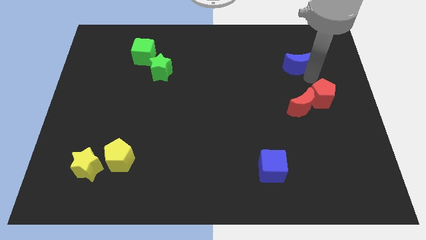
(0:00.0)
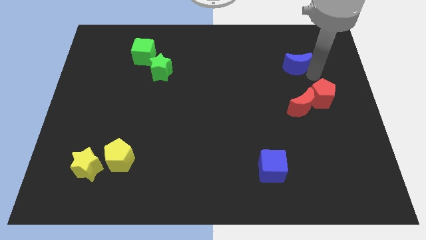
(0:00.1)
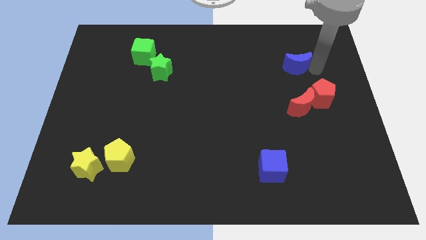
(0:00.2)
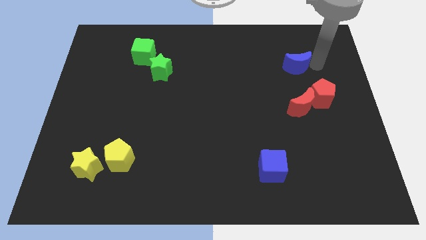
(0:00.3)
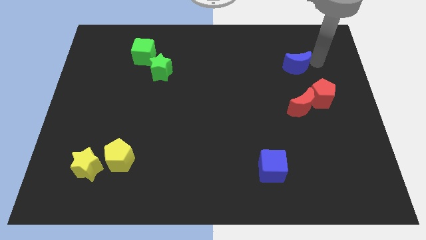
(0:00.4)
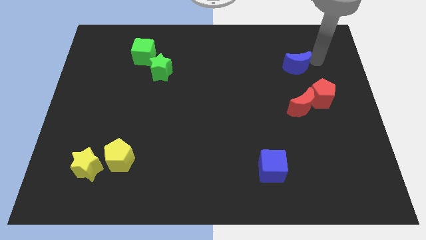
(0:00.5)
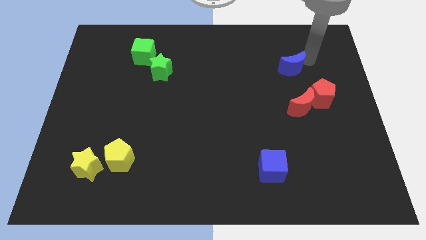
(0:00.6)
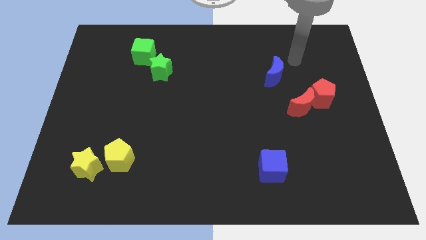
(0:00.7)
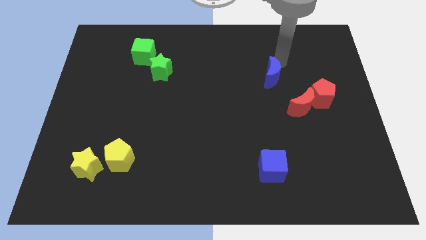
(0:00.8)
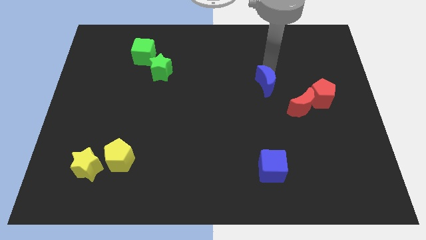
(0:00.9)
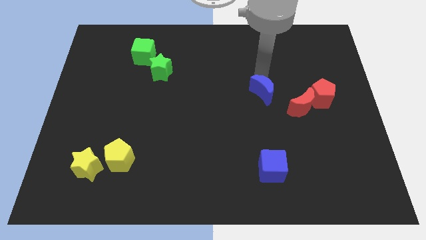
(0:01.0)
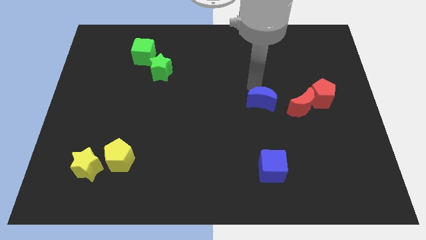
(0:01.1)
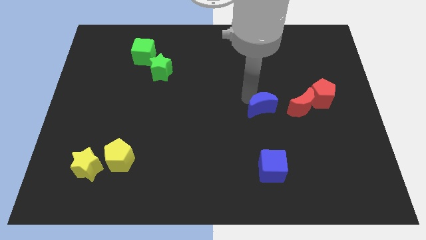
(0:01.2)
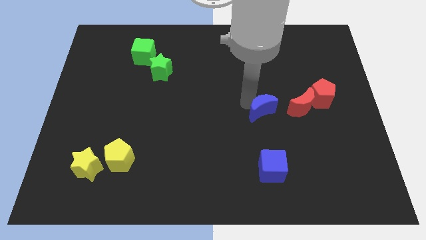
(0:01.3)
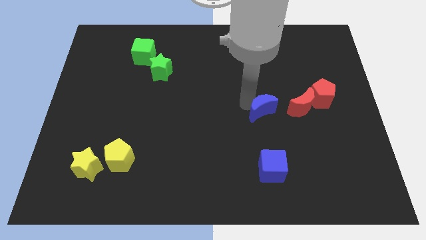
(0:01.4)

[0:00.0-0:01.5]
move the blue crescent to the left of the red crescent

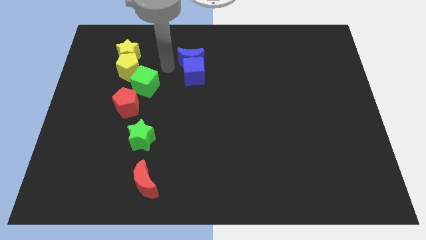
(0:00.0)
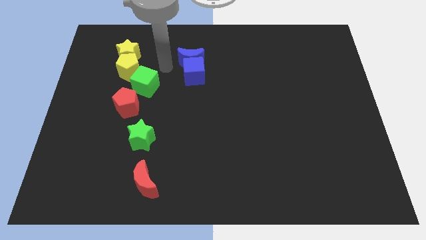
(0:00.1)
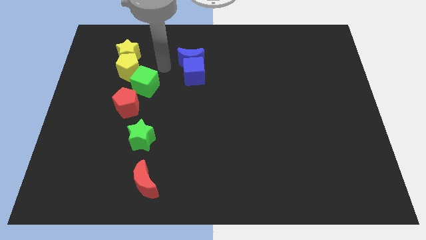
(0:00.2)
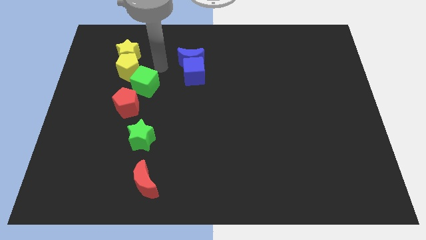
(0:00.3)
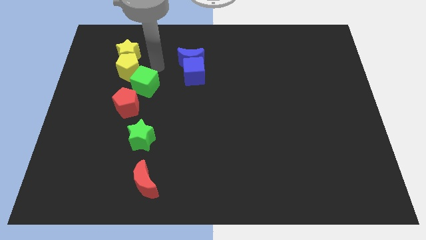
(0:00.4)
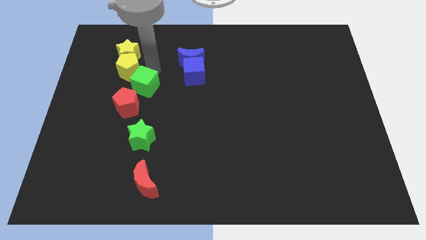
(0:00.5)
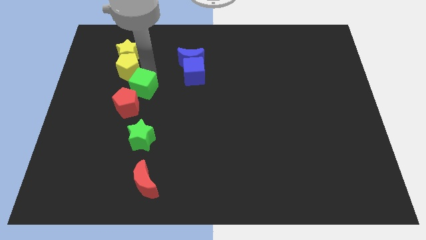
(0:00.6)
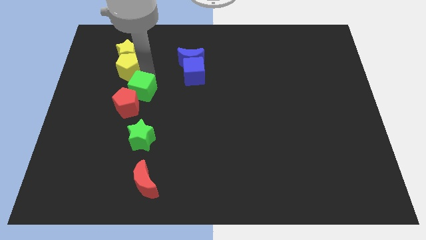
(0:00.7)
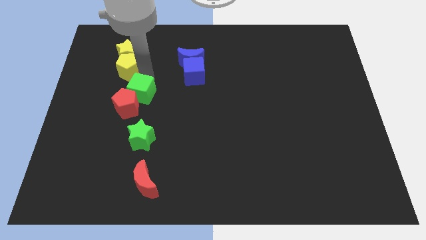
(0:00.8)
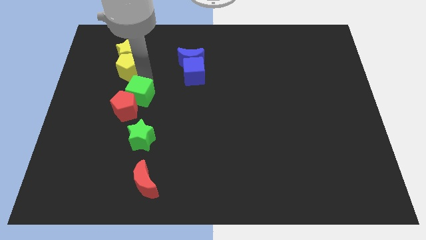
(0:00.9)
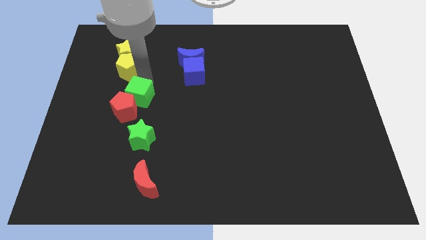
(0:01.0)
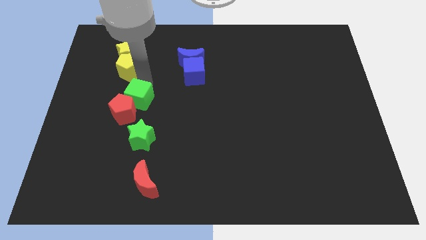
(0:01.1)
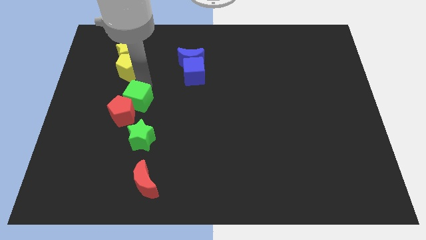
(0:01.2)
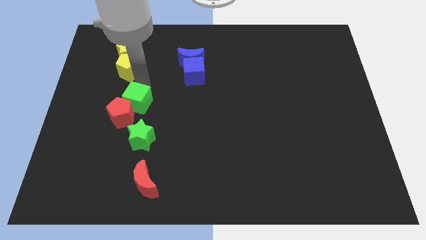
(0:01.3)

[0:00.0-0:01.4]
put the green cube and red pentagon together

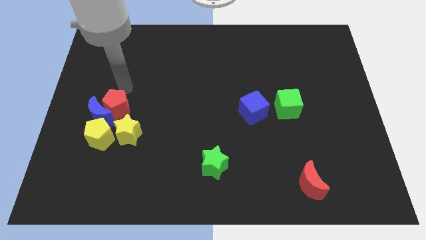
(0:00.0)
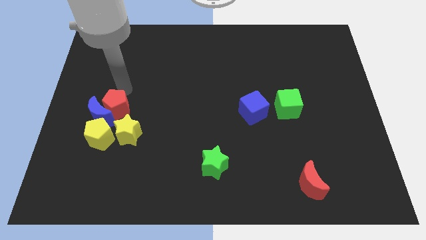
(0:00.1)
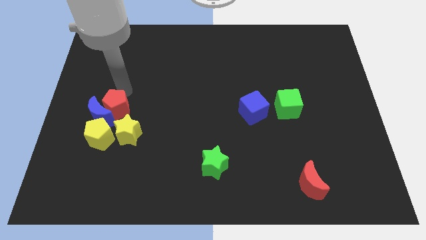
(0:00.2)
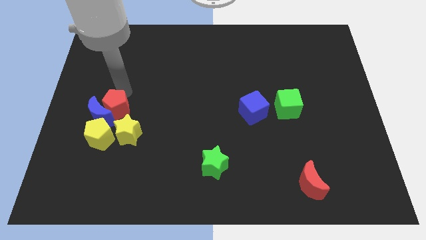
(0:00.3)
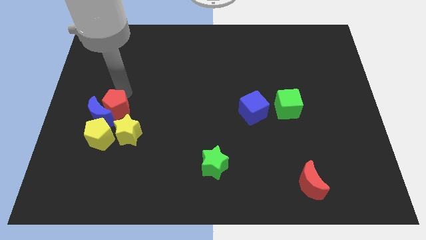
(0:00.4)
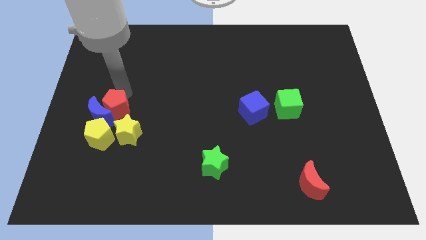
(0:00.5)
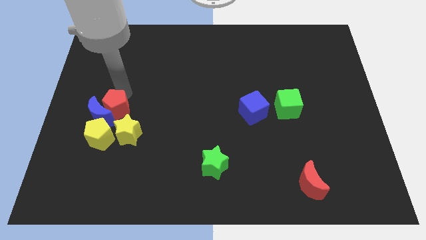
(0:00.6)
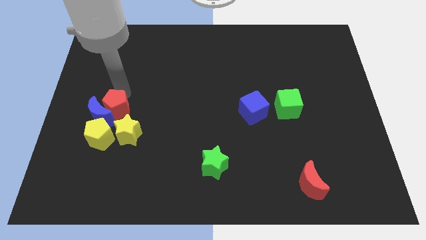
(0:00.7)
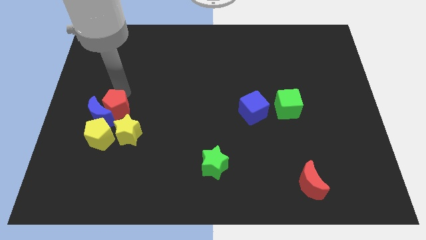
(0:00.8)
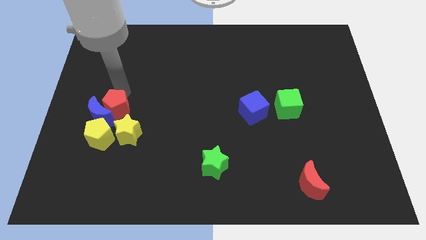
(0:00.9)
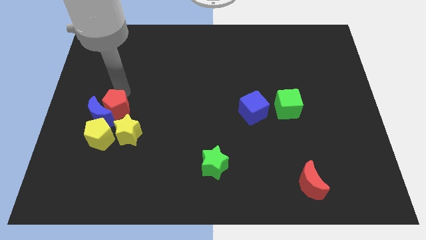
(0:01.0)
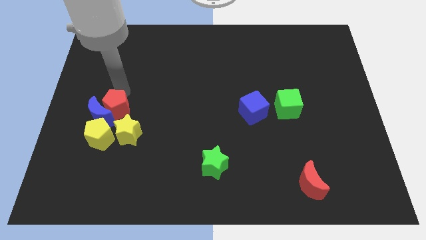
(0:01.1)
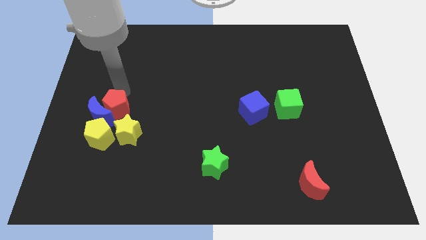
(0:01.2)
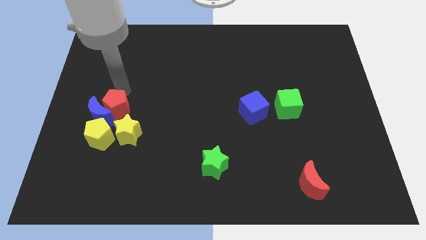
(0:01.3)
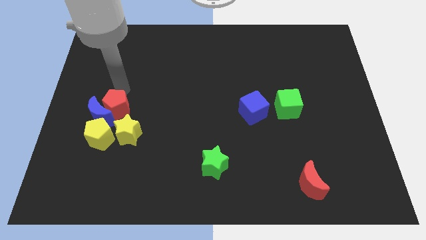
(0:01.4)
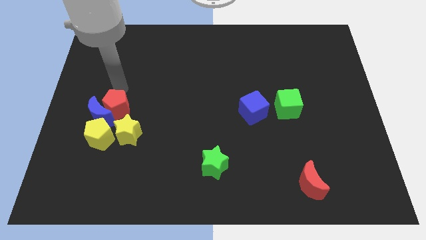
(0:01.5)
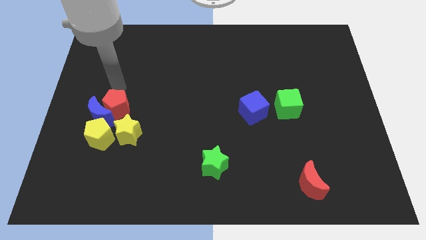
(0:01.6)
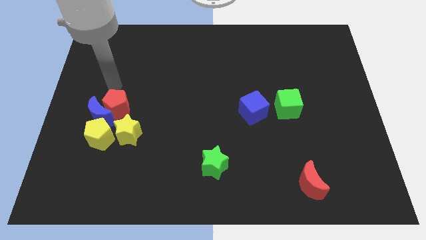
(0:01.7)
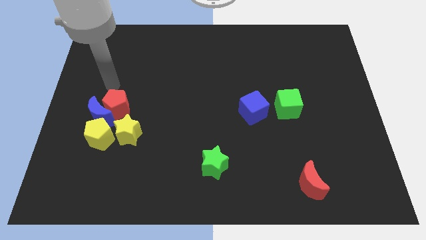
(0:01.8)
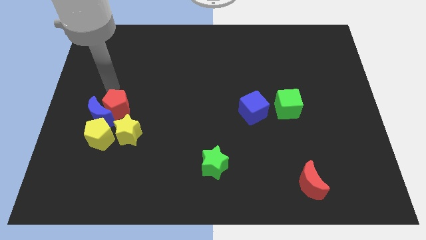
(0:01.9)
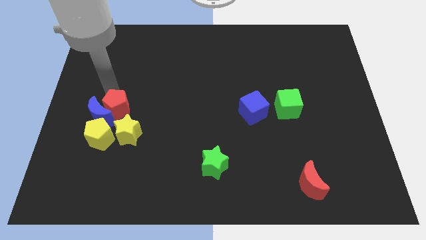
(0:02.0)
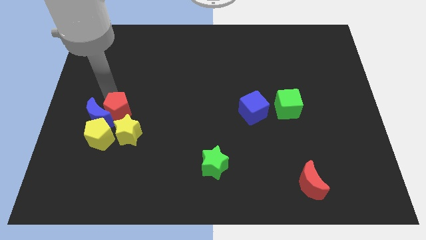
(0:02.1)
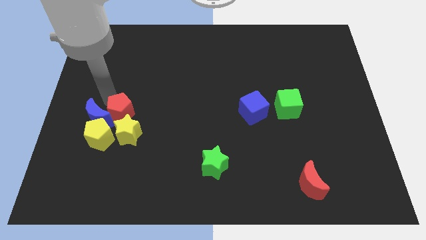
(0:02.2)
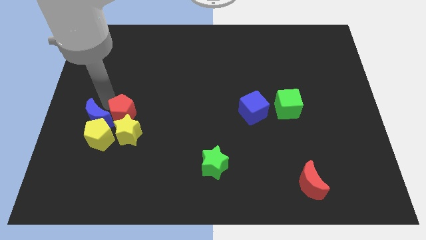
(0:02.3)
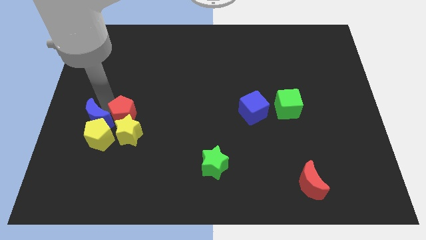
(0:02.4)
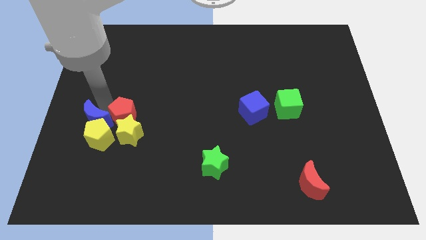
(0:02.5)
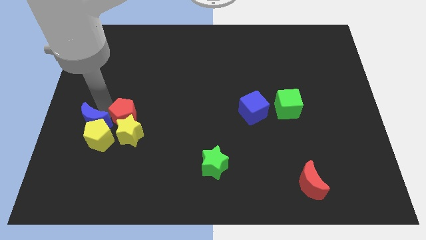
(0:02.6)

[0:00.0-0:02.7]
push a group of blocks slightly downward

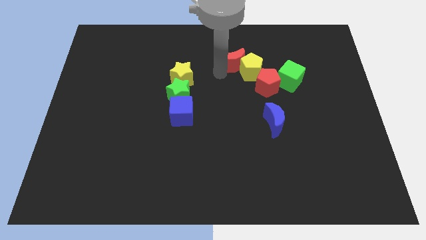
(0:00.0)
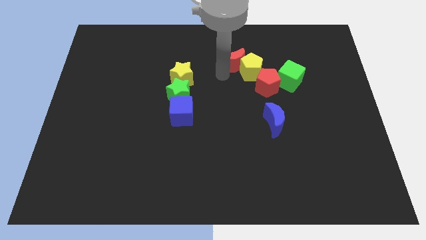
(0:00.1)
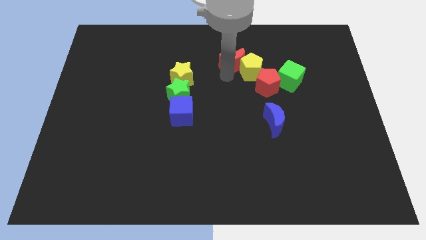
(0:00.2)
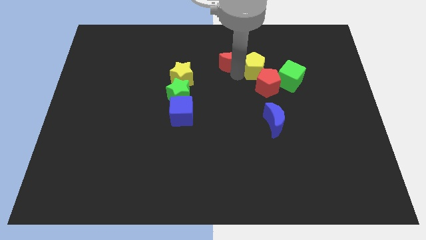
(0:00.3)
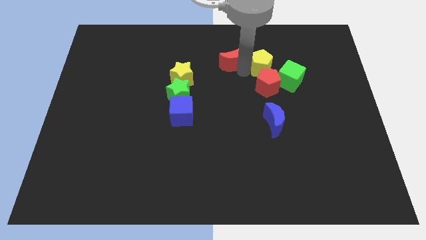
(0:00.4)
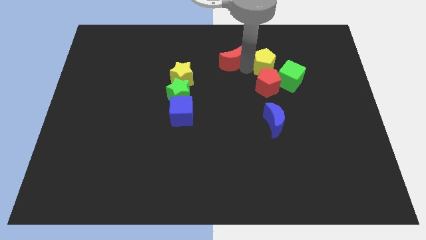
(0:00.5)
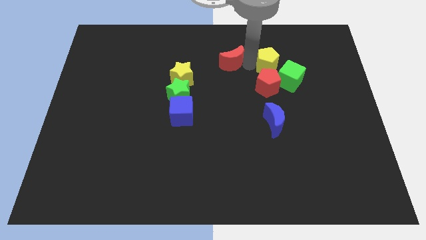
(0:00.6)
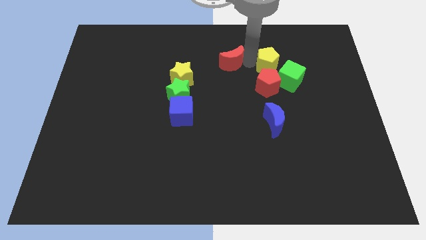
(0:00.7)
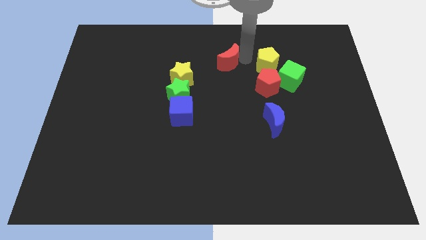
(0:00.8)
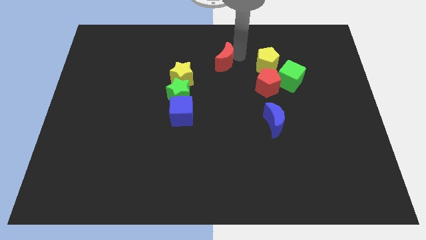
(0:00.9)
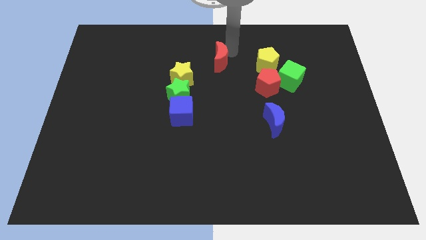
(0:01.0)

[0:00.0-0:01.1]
separate the yellow pentagon and the red crescent

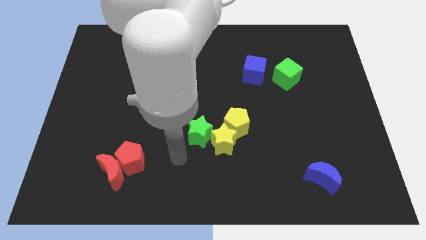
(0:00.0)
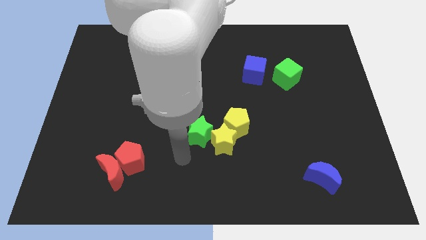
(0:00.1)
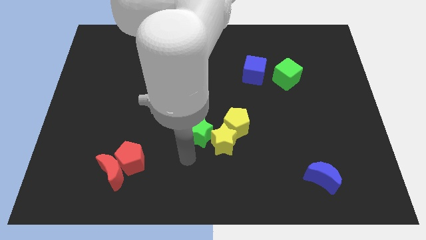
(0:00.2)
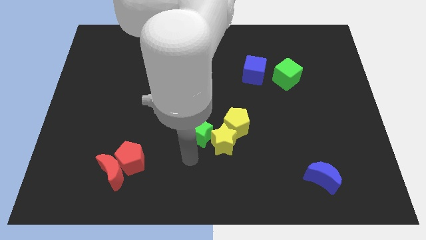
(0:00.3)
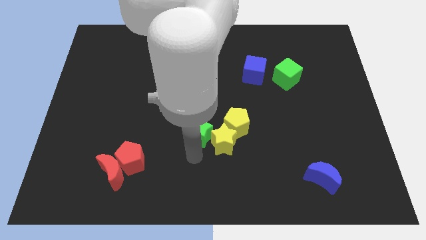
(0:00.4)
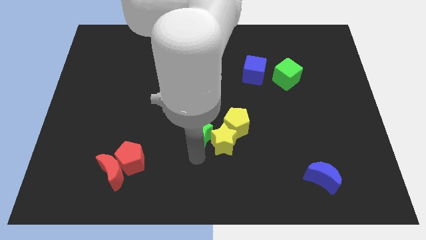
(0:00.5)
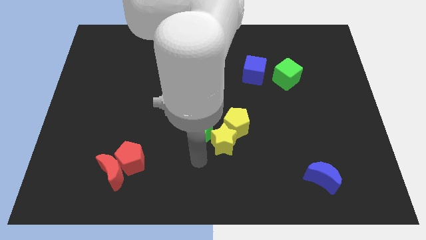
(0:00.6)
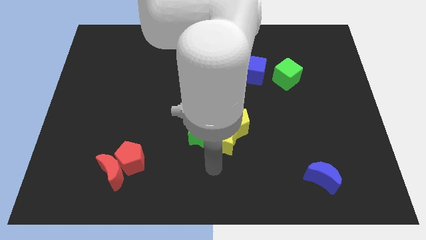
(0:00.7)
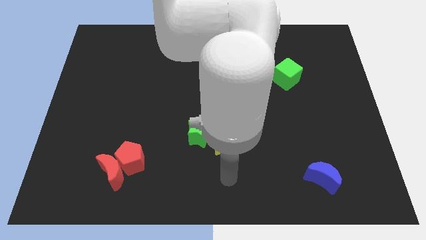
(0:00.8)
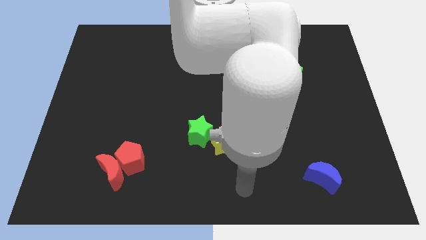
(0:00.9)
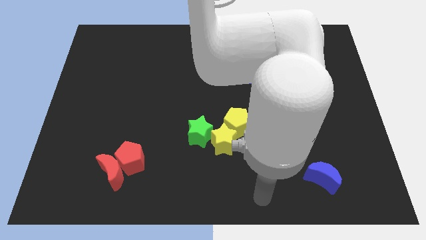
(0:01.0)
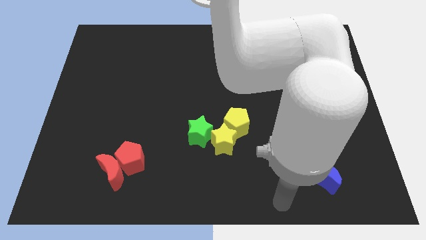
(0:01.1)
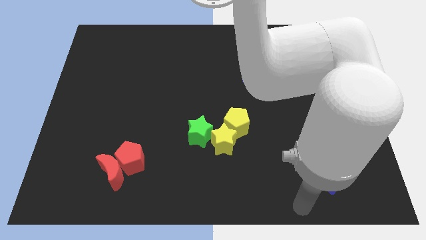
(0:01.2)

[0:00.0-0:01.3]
move the arm towards the blue crescent

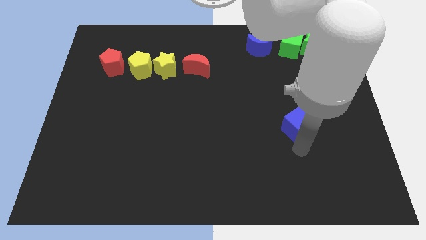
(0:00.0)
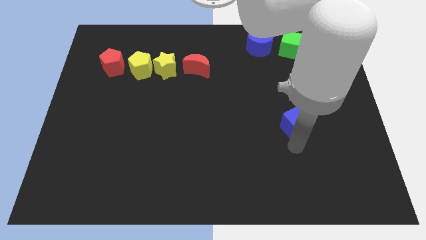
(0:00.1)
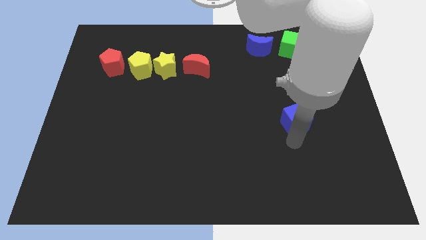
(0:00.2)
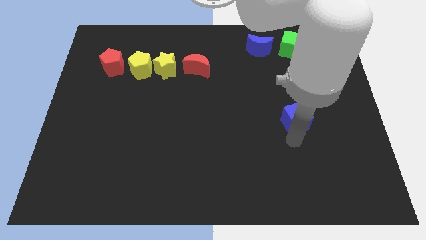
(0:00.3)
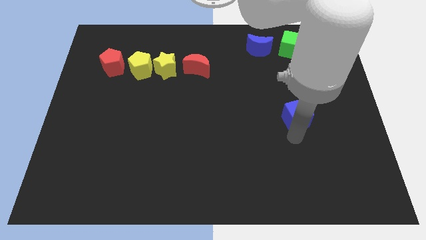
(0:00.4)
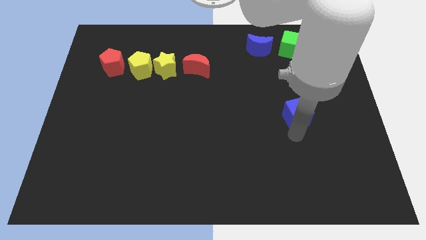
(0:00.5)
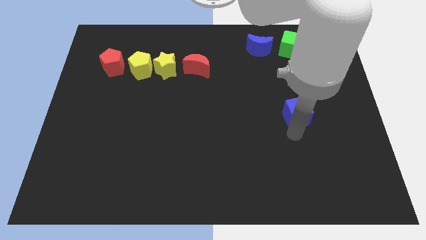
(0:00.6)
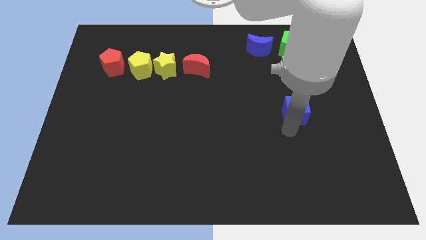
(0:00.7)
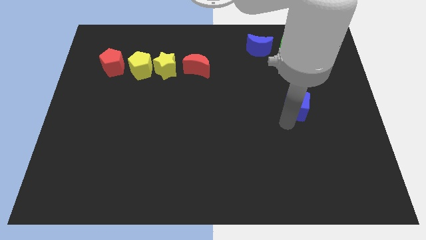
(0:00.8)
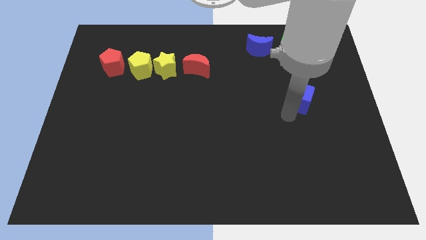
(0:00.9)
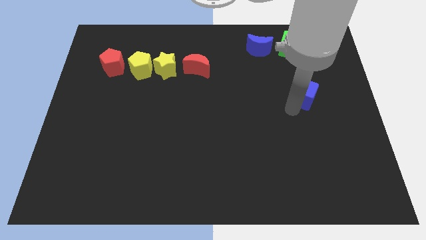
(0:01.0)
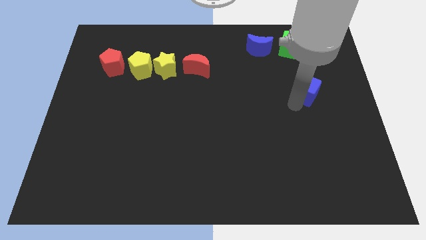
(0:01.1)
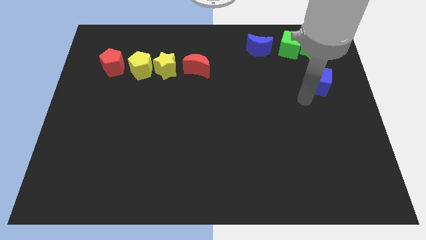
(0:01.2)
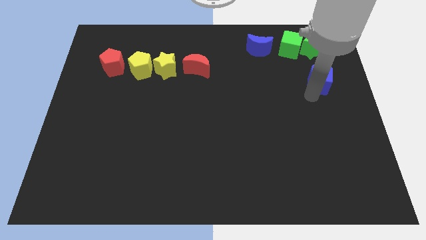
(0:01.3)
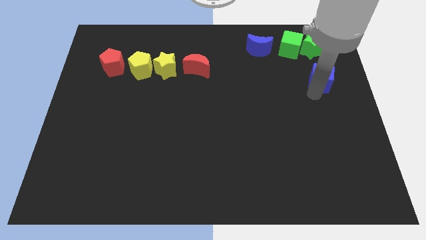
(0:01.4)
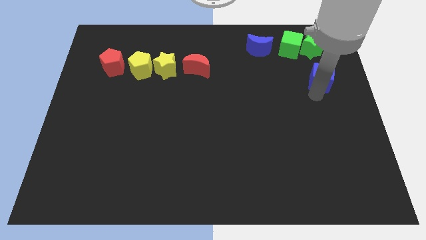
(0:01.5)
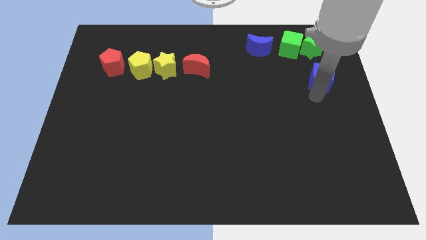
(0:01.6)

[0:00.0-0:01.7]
place the blue cube under the green star
